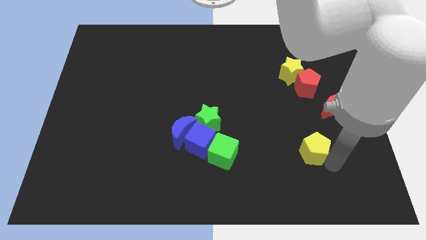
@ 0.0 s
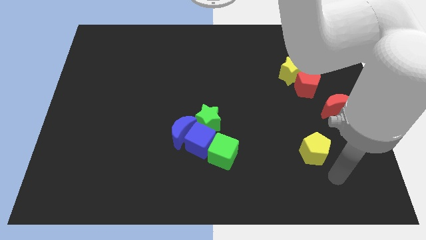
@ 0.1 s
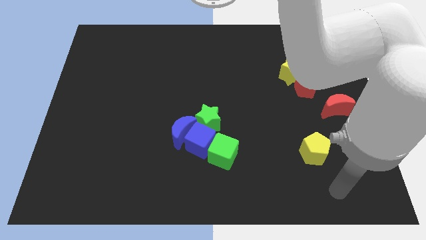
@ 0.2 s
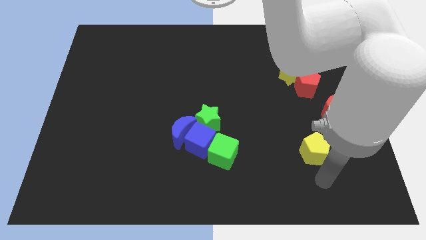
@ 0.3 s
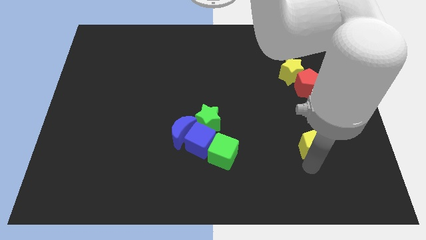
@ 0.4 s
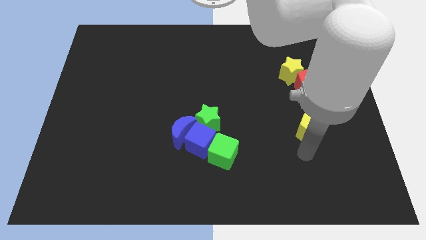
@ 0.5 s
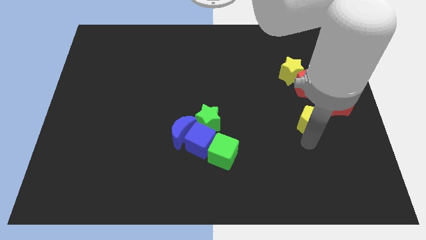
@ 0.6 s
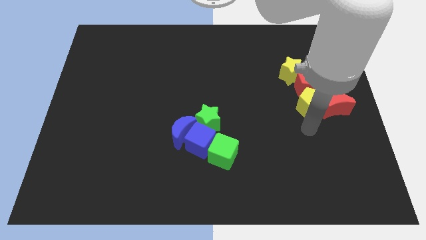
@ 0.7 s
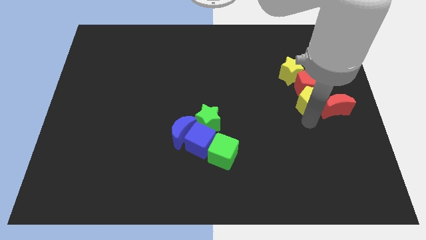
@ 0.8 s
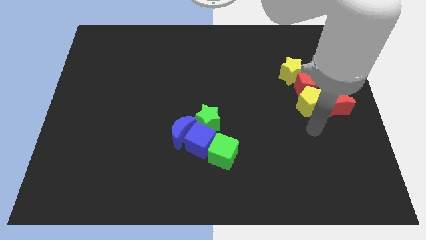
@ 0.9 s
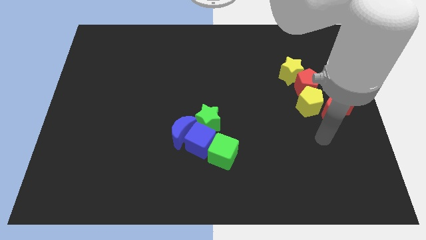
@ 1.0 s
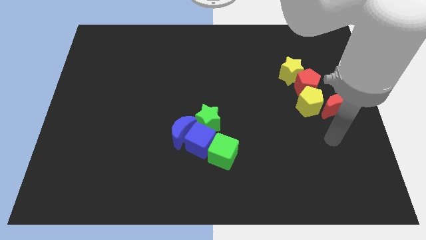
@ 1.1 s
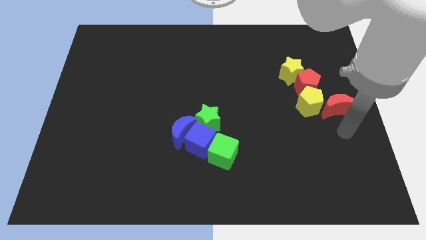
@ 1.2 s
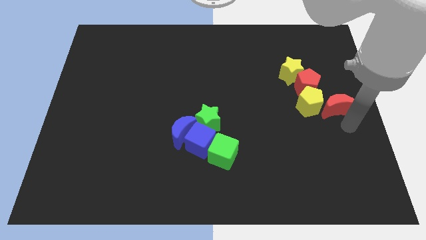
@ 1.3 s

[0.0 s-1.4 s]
push the yellow pentagon to bottom of the red pentagon

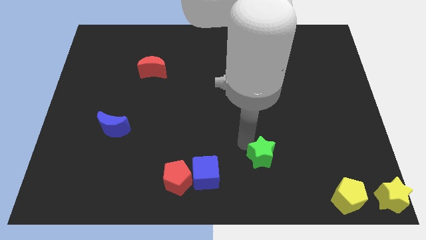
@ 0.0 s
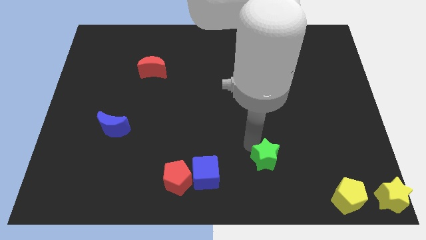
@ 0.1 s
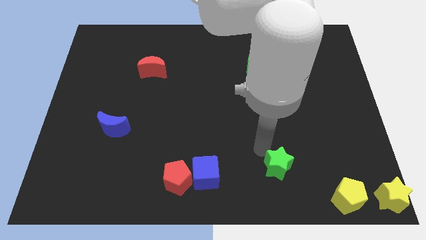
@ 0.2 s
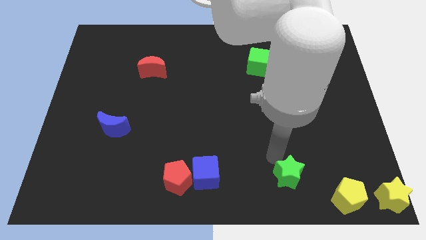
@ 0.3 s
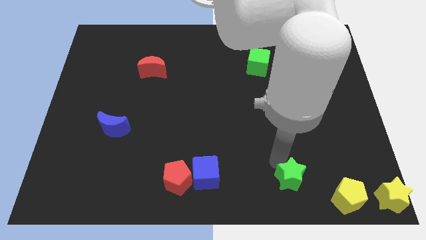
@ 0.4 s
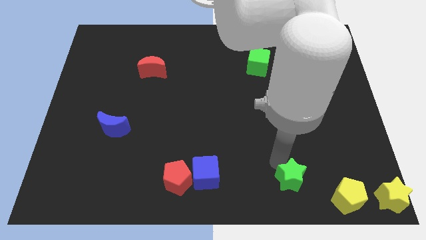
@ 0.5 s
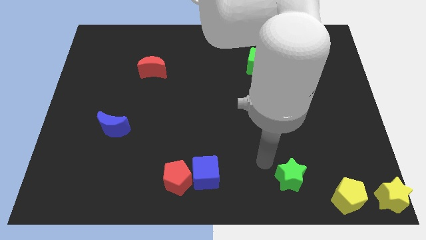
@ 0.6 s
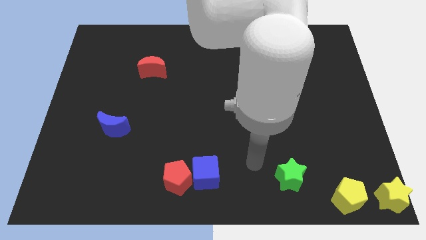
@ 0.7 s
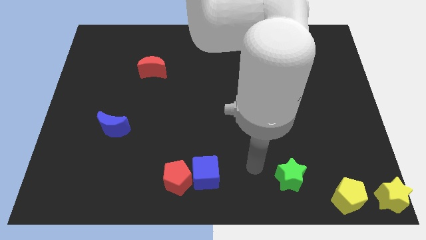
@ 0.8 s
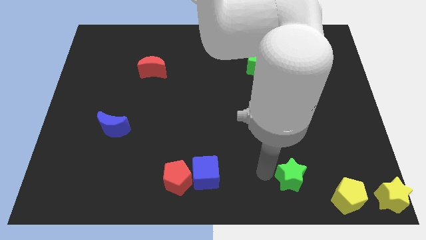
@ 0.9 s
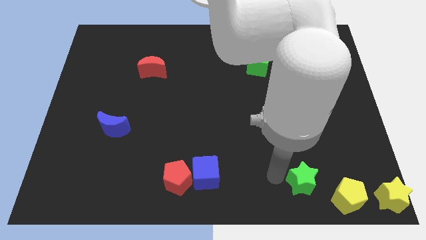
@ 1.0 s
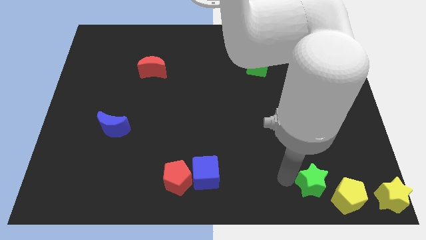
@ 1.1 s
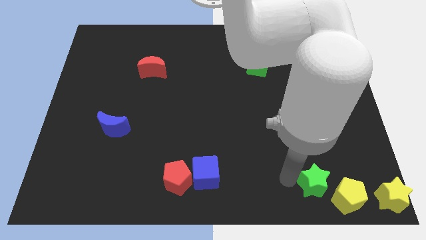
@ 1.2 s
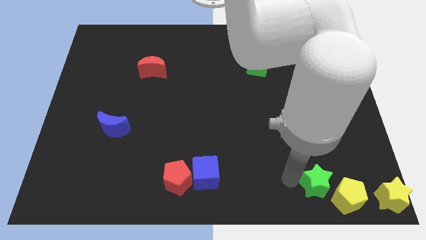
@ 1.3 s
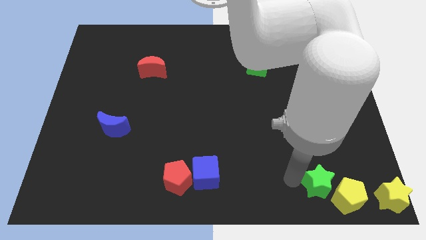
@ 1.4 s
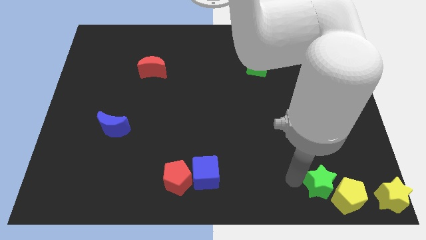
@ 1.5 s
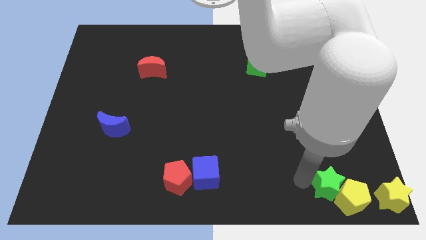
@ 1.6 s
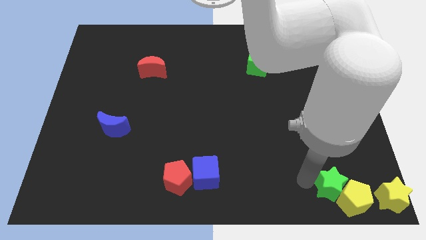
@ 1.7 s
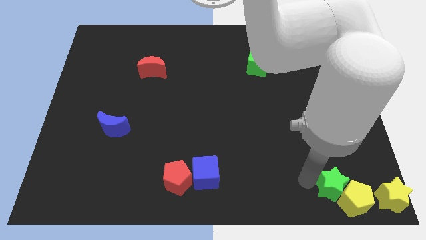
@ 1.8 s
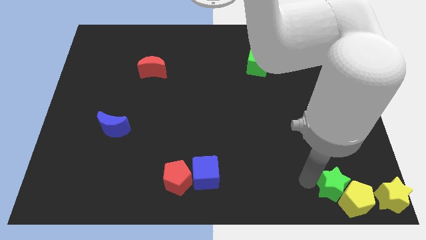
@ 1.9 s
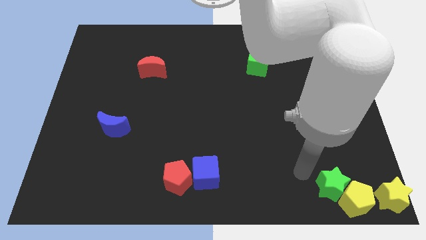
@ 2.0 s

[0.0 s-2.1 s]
move the green star to the top left side of the green star

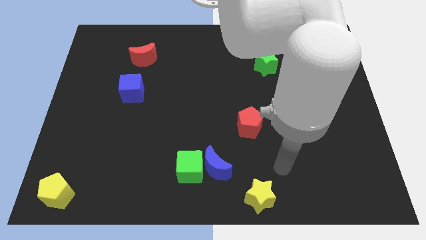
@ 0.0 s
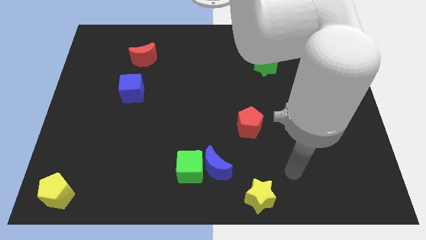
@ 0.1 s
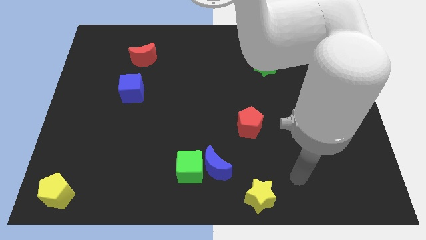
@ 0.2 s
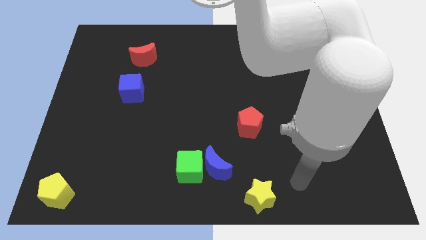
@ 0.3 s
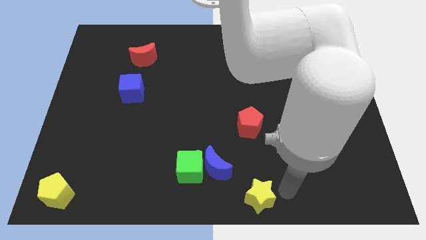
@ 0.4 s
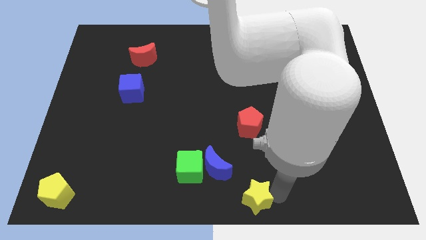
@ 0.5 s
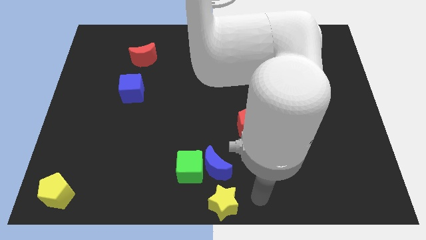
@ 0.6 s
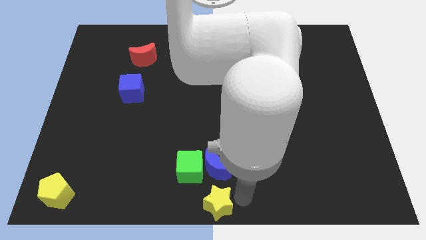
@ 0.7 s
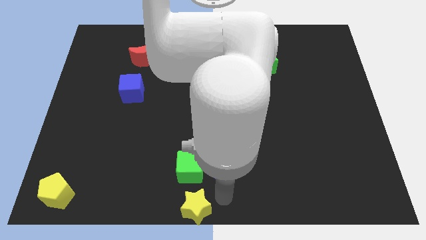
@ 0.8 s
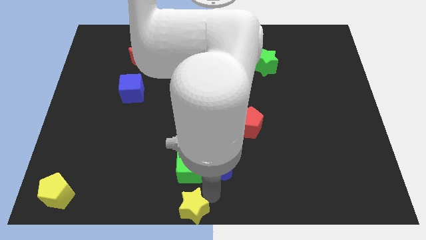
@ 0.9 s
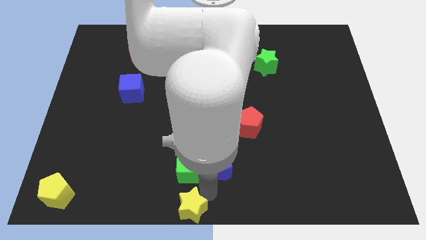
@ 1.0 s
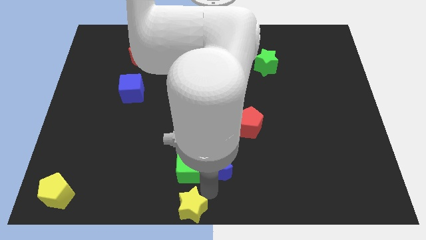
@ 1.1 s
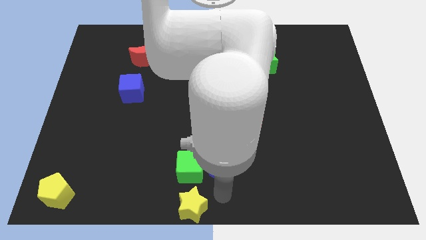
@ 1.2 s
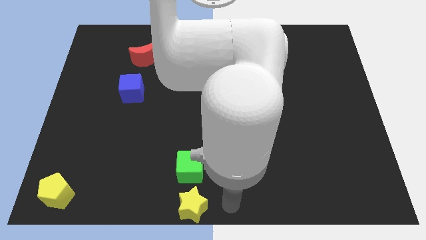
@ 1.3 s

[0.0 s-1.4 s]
place yellow star below green cube

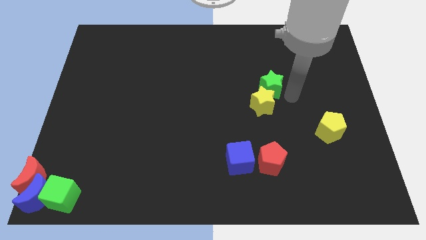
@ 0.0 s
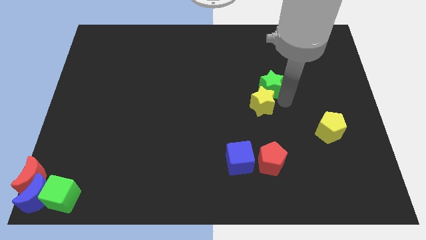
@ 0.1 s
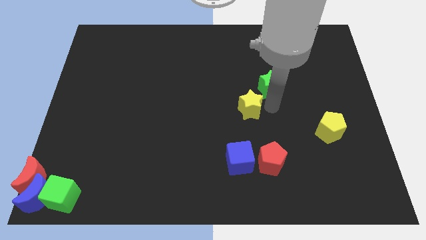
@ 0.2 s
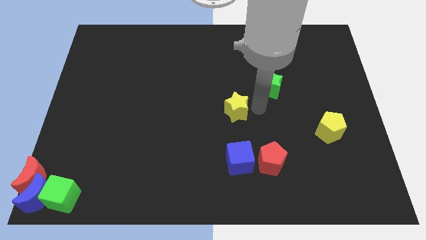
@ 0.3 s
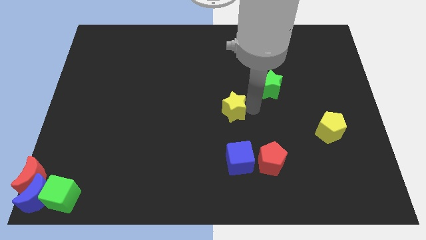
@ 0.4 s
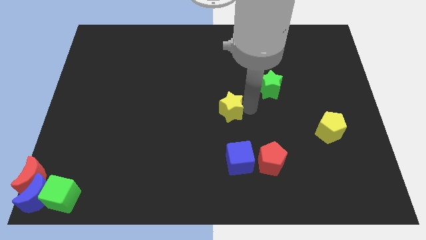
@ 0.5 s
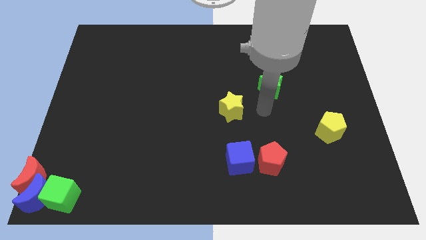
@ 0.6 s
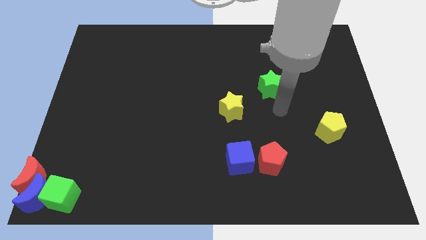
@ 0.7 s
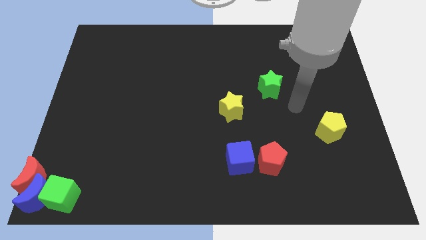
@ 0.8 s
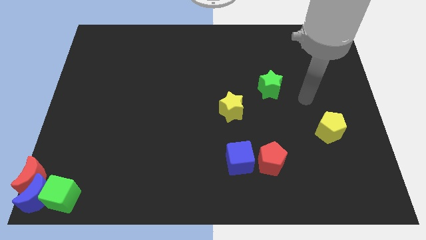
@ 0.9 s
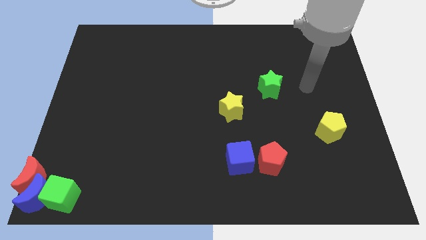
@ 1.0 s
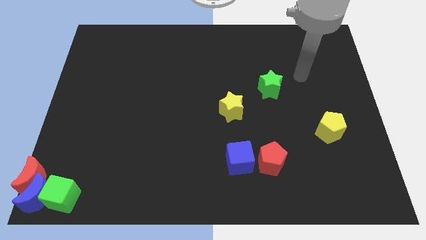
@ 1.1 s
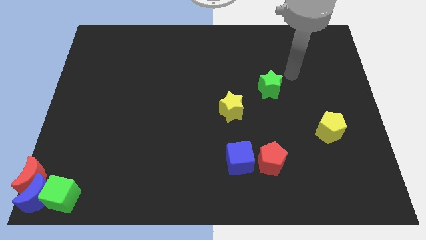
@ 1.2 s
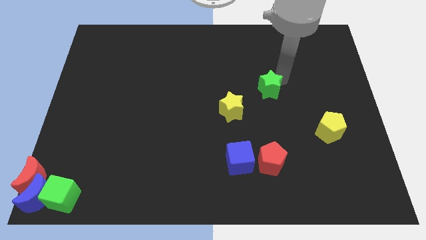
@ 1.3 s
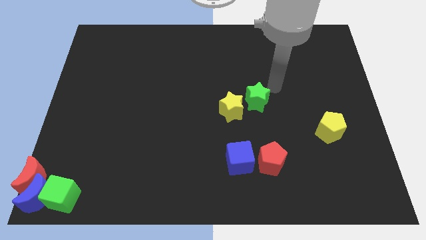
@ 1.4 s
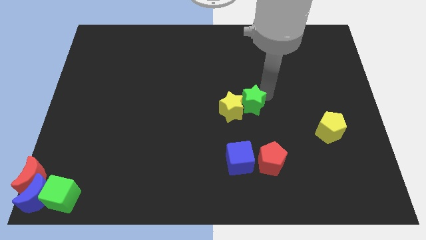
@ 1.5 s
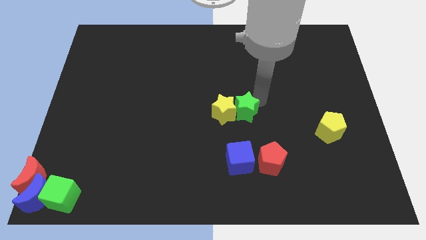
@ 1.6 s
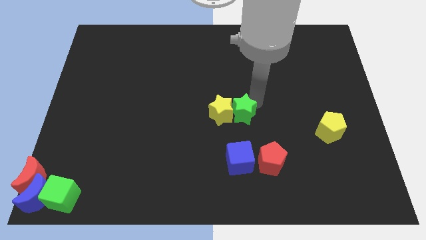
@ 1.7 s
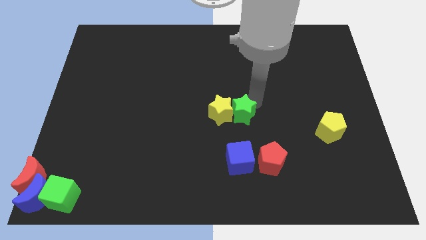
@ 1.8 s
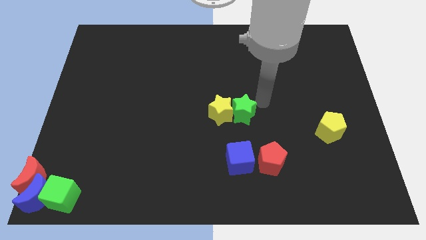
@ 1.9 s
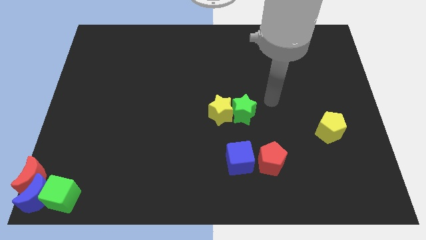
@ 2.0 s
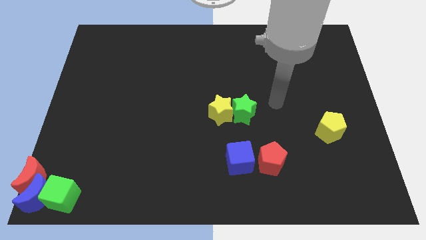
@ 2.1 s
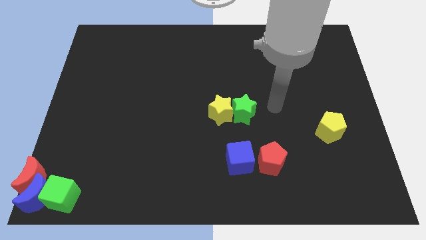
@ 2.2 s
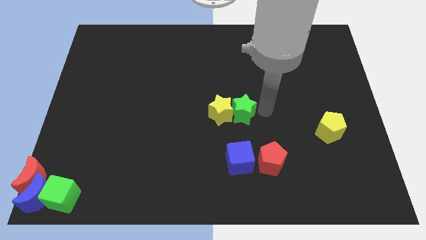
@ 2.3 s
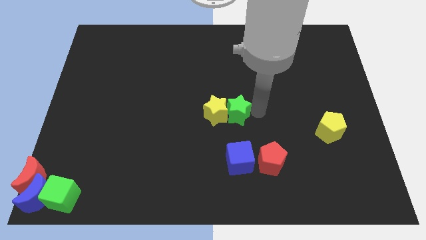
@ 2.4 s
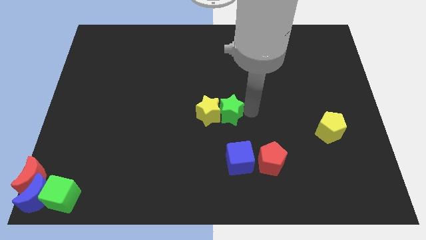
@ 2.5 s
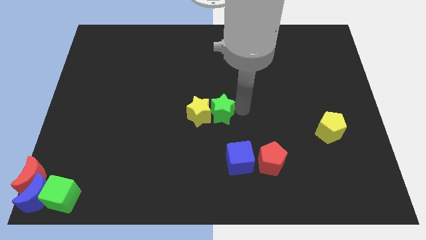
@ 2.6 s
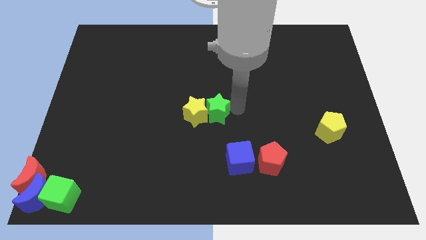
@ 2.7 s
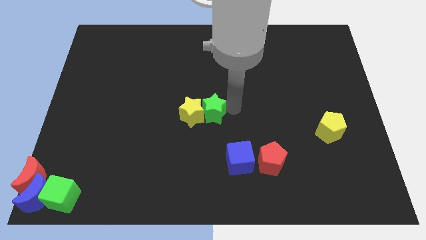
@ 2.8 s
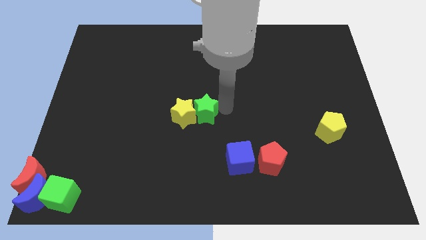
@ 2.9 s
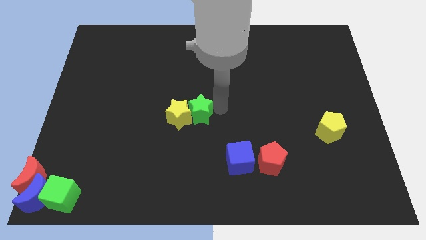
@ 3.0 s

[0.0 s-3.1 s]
move the green star into the yellow star to the center

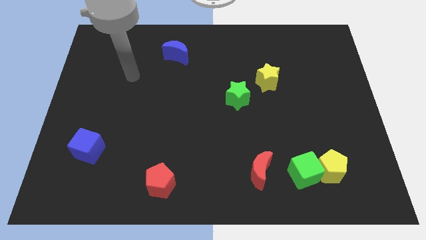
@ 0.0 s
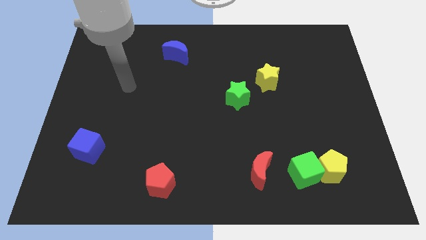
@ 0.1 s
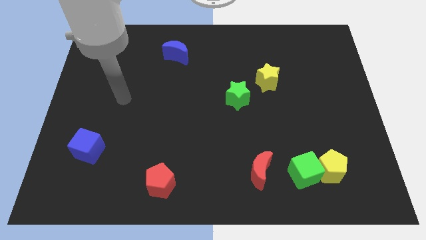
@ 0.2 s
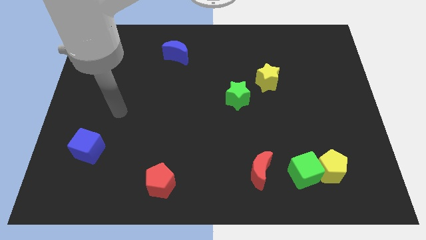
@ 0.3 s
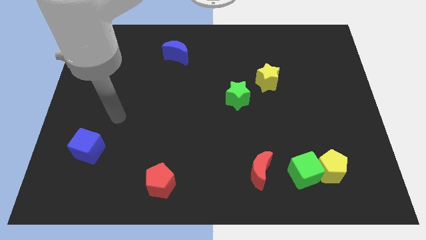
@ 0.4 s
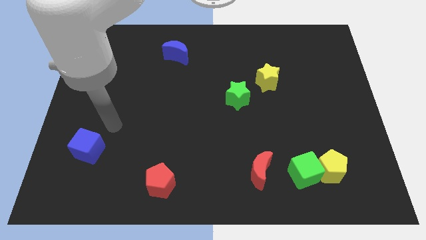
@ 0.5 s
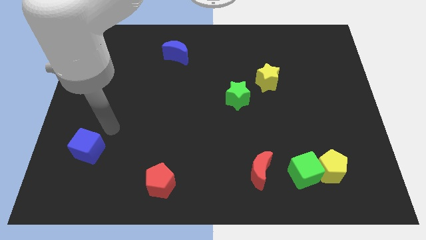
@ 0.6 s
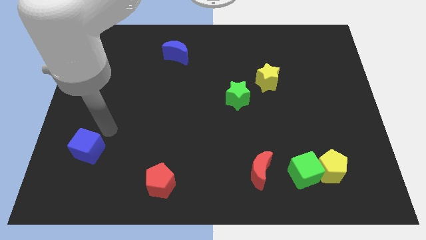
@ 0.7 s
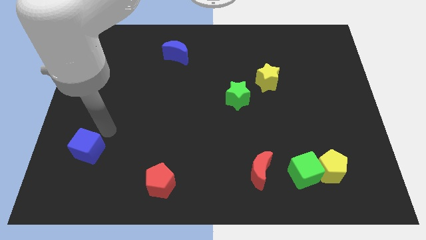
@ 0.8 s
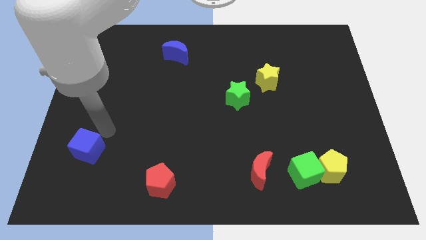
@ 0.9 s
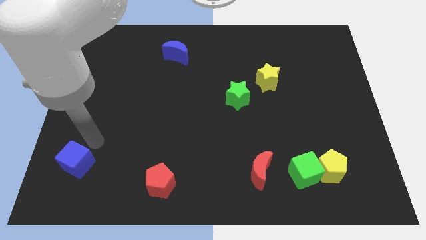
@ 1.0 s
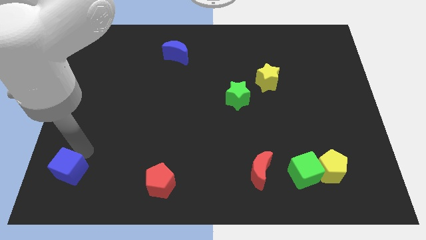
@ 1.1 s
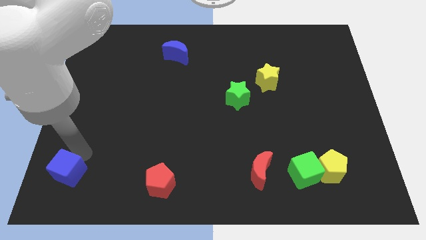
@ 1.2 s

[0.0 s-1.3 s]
push the blue cube towards the bottom left side of the board
